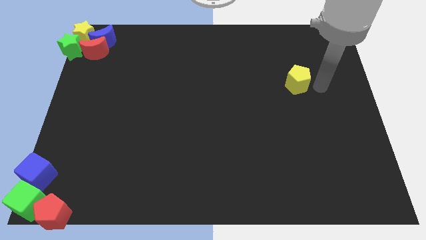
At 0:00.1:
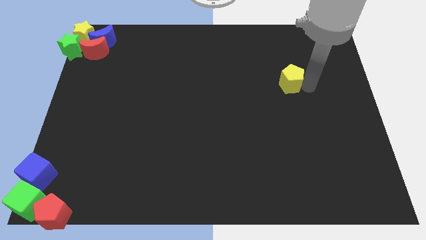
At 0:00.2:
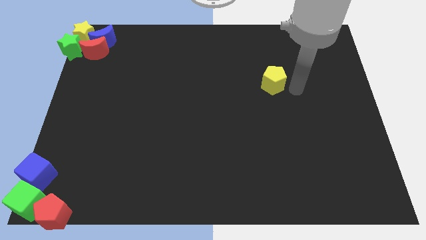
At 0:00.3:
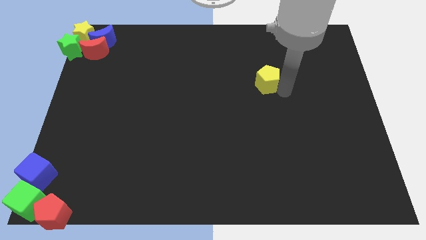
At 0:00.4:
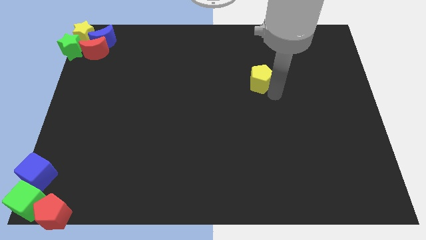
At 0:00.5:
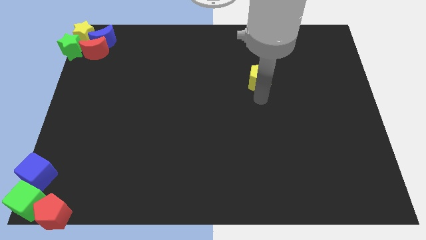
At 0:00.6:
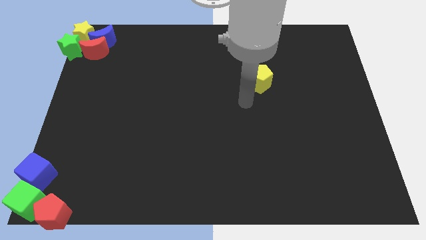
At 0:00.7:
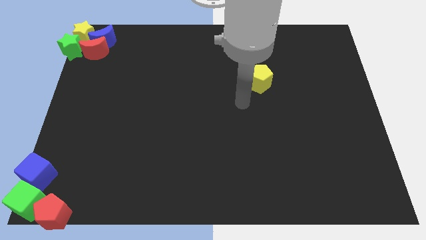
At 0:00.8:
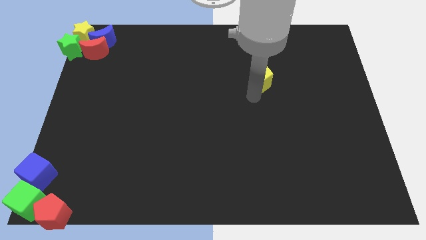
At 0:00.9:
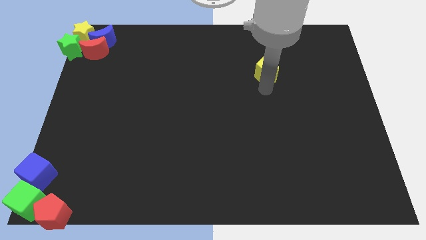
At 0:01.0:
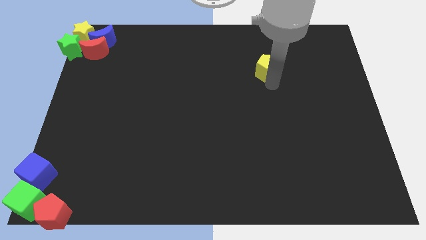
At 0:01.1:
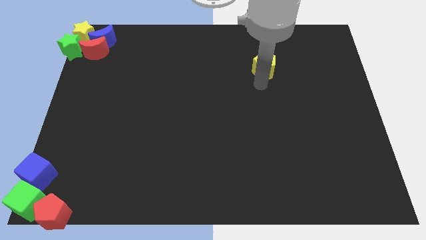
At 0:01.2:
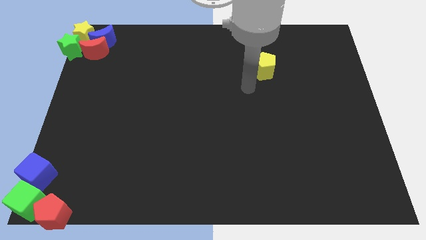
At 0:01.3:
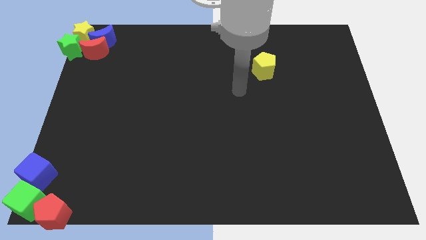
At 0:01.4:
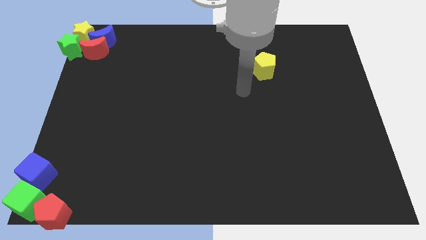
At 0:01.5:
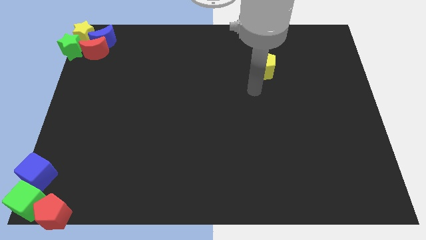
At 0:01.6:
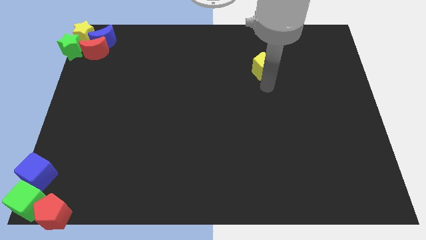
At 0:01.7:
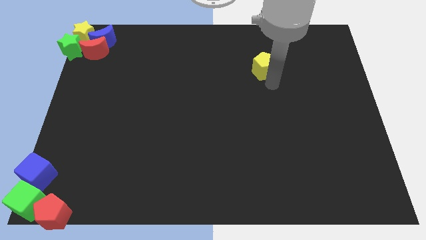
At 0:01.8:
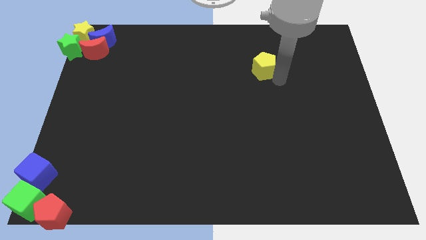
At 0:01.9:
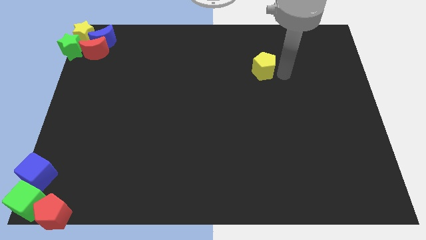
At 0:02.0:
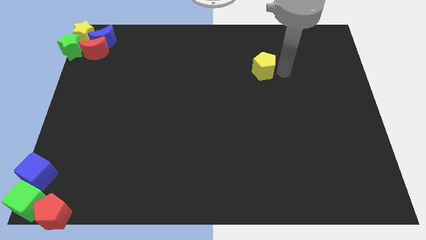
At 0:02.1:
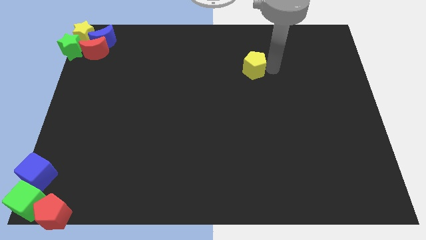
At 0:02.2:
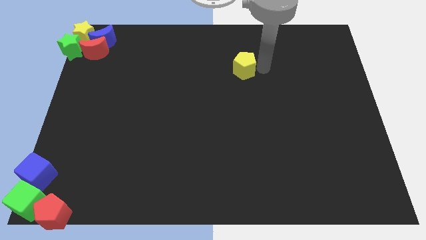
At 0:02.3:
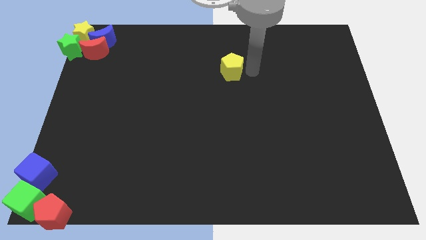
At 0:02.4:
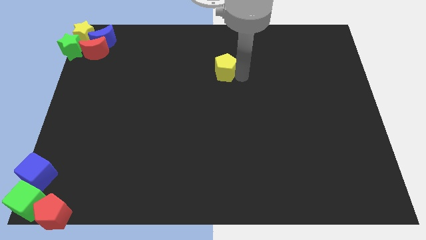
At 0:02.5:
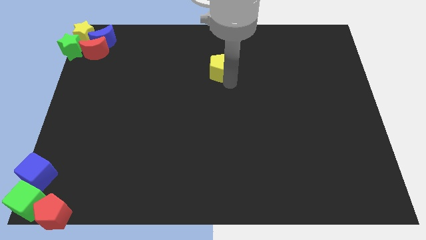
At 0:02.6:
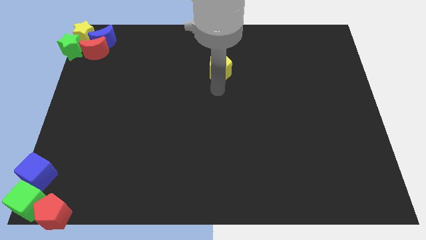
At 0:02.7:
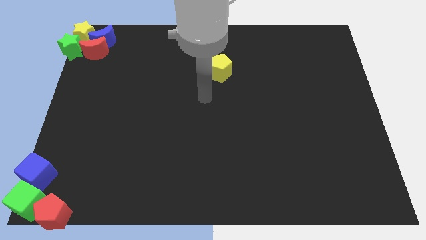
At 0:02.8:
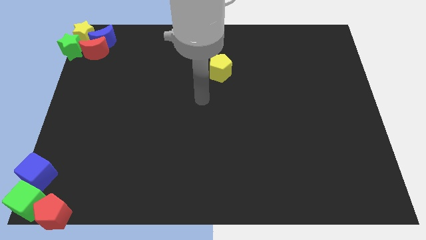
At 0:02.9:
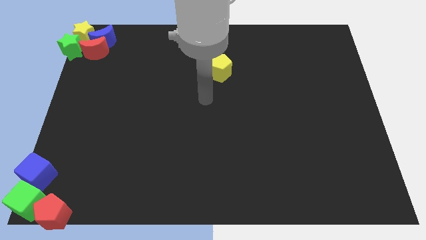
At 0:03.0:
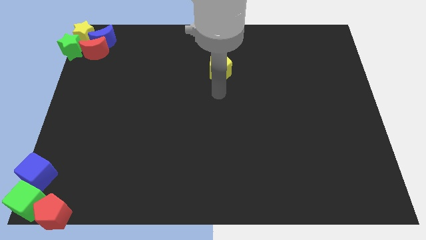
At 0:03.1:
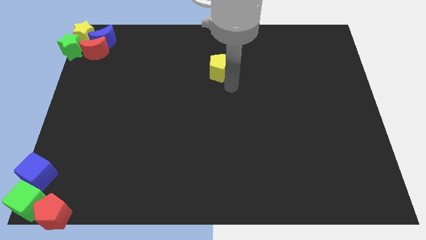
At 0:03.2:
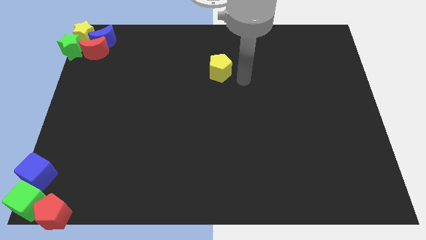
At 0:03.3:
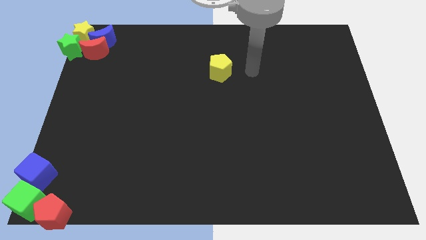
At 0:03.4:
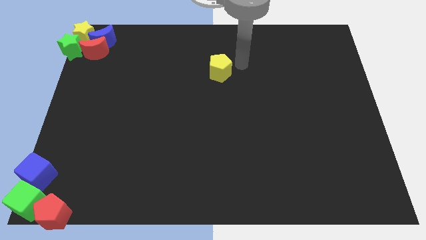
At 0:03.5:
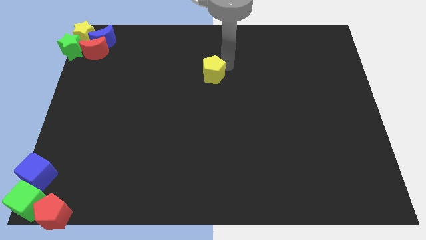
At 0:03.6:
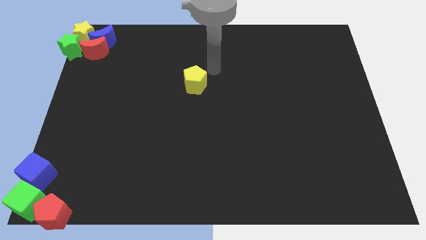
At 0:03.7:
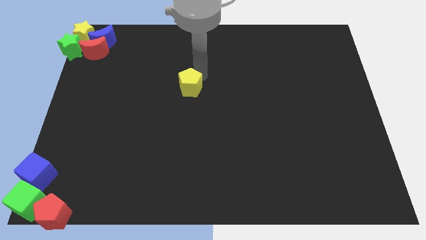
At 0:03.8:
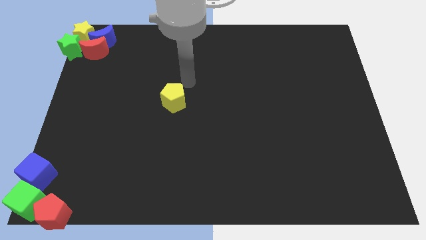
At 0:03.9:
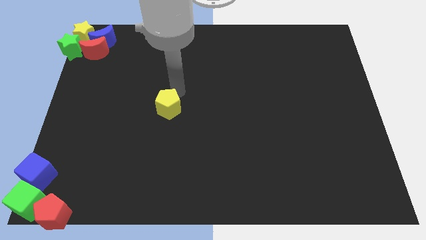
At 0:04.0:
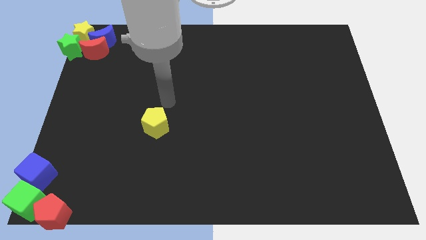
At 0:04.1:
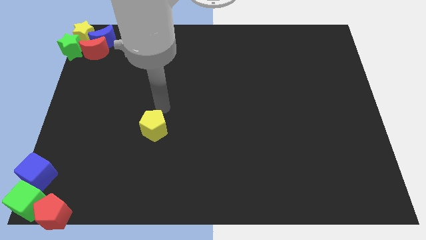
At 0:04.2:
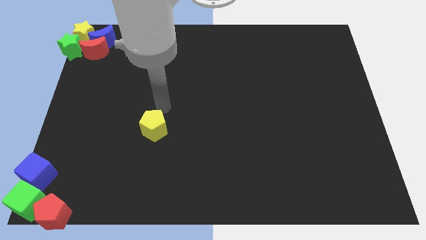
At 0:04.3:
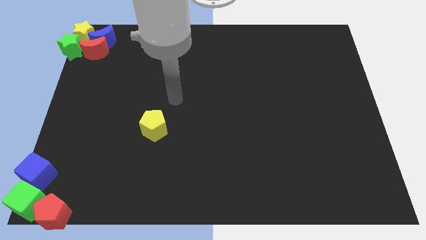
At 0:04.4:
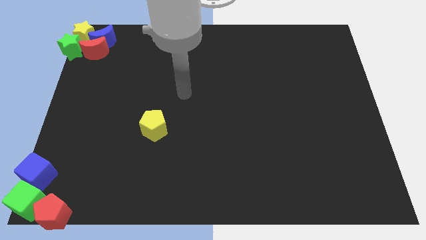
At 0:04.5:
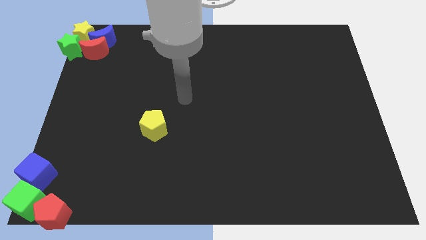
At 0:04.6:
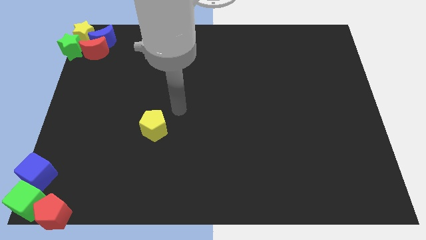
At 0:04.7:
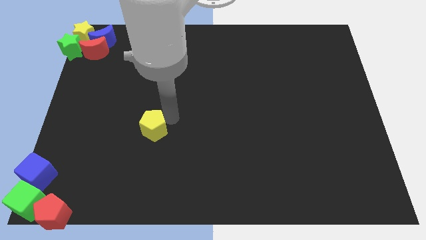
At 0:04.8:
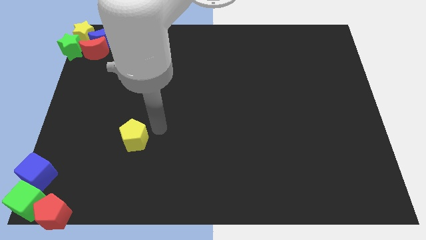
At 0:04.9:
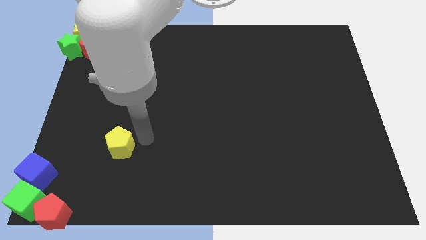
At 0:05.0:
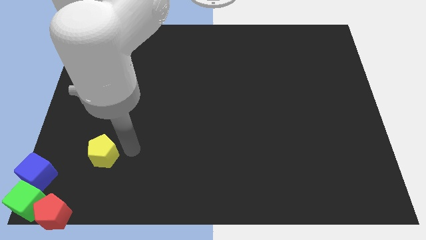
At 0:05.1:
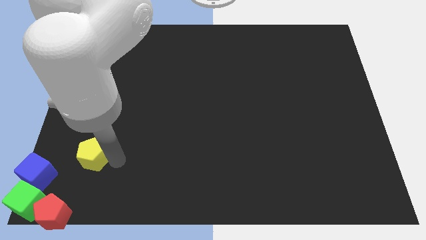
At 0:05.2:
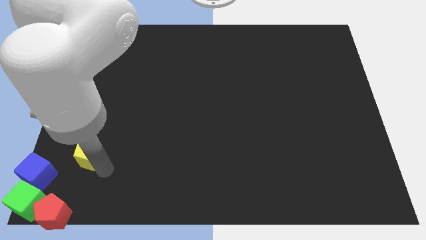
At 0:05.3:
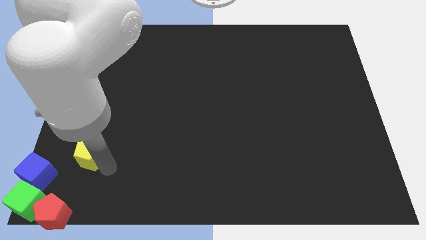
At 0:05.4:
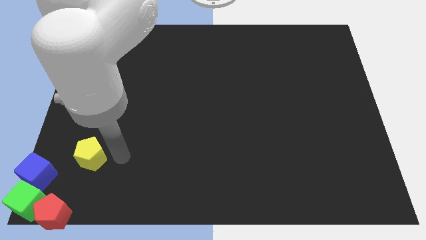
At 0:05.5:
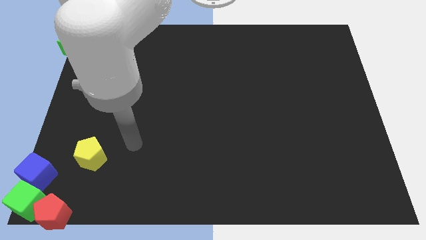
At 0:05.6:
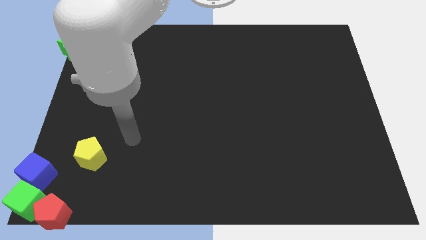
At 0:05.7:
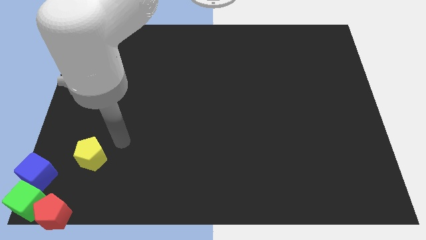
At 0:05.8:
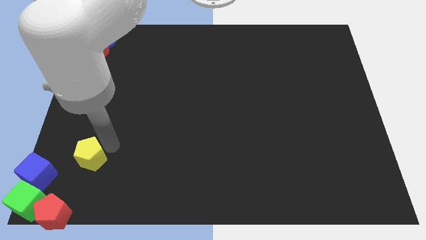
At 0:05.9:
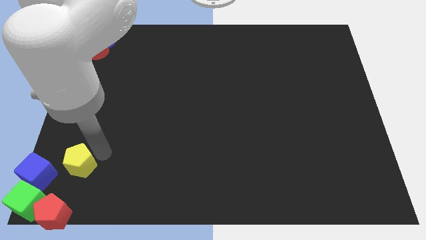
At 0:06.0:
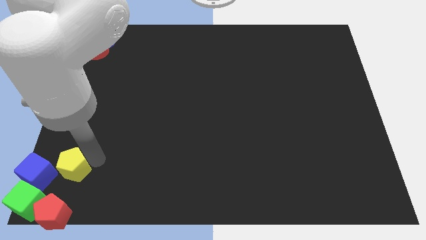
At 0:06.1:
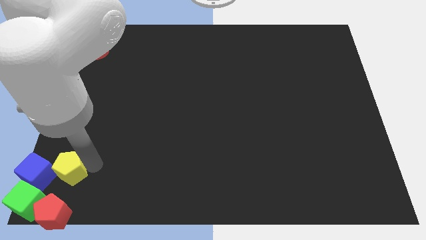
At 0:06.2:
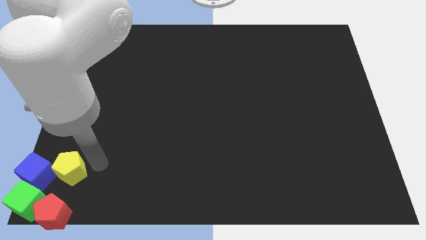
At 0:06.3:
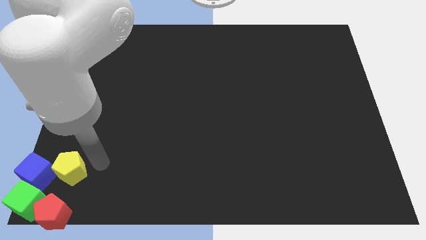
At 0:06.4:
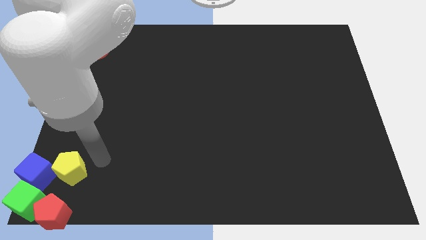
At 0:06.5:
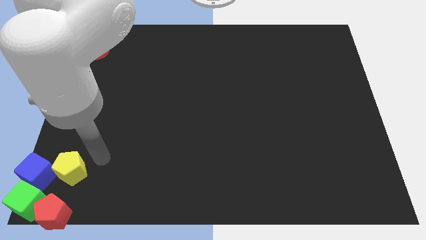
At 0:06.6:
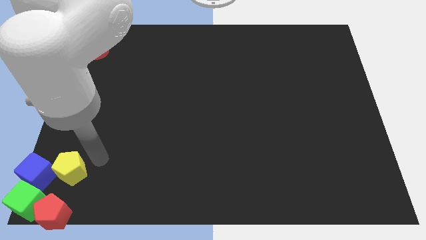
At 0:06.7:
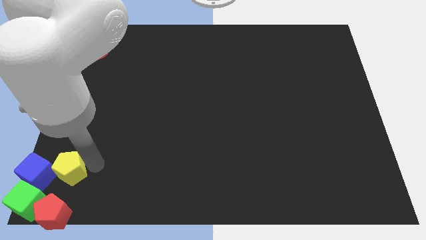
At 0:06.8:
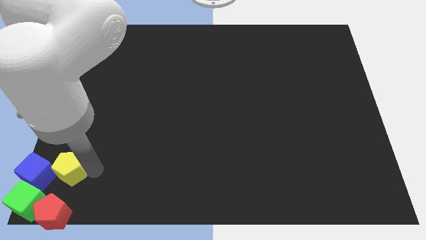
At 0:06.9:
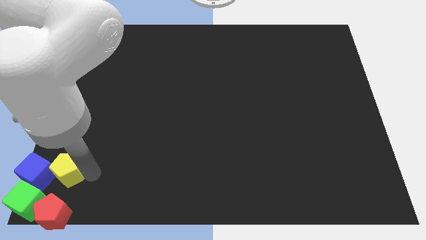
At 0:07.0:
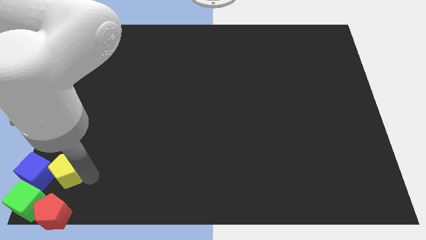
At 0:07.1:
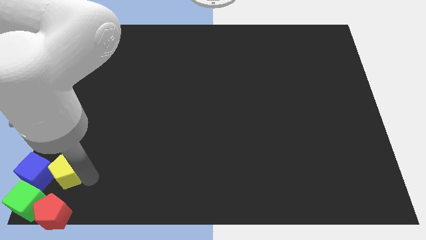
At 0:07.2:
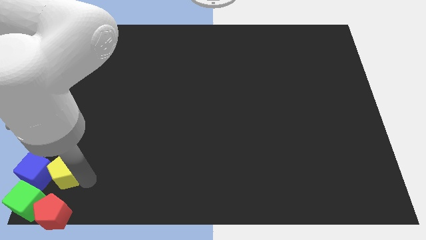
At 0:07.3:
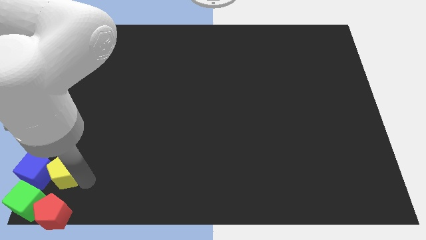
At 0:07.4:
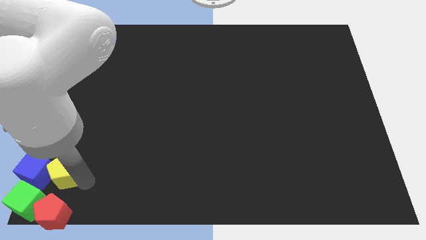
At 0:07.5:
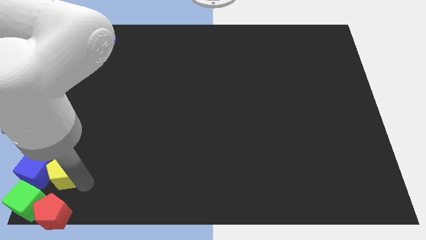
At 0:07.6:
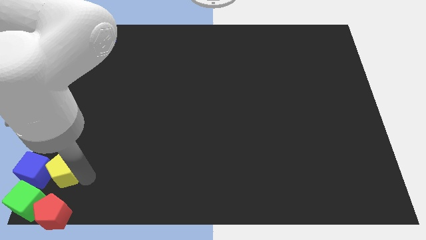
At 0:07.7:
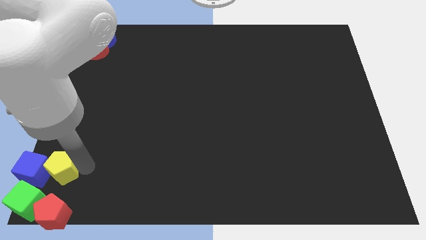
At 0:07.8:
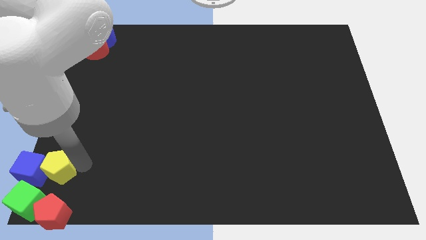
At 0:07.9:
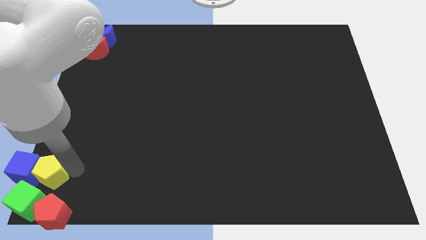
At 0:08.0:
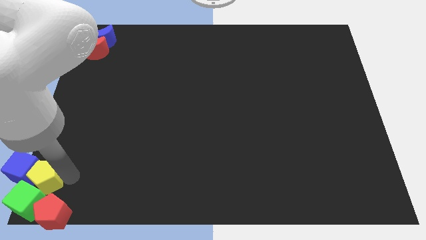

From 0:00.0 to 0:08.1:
move yellow pentagon into blue cube

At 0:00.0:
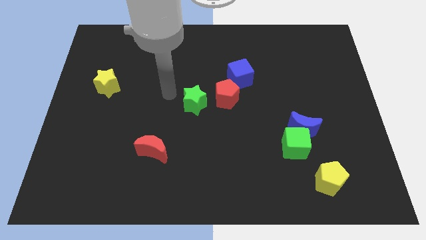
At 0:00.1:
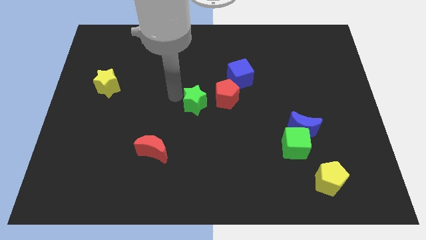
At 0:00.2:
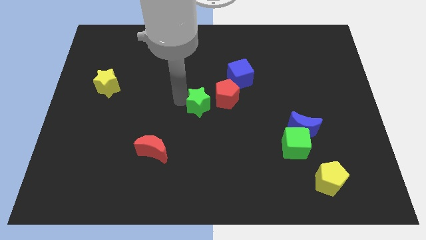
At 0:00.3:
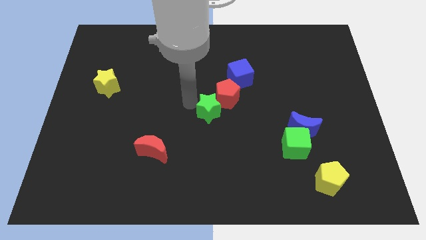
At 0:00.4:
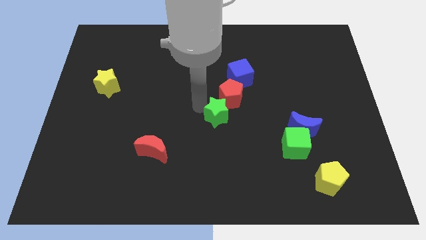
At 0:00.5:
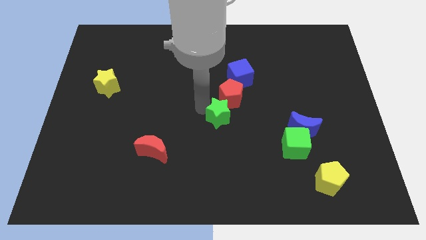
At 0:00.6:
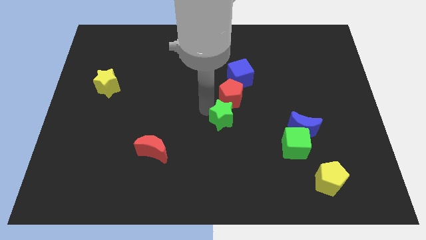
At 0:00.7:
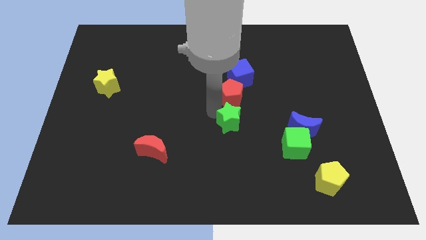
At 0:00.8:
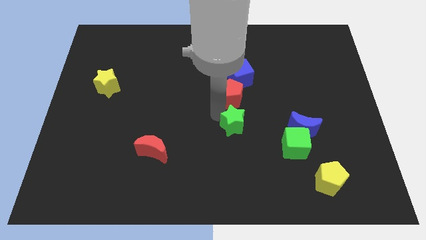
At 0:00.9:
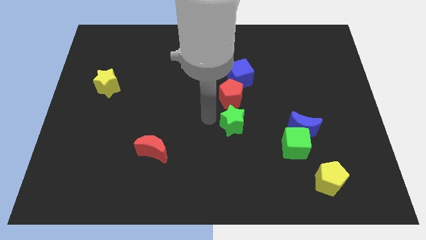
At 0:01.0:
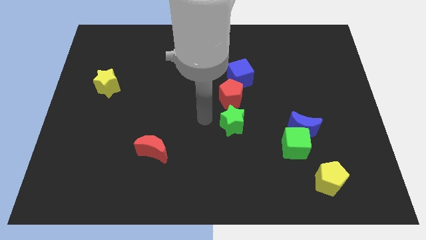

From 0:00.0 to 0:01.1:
push the green star to the bottom of the red pentagon
